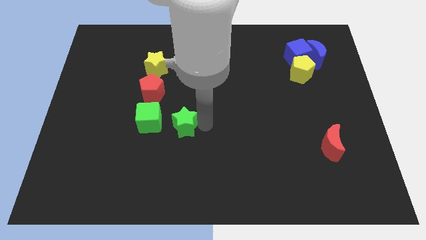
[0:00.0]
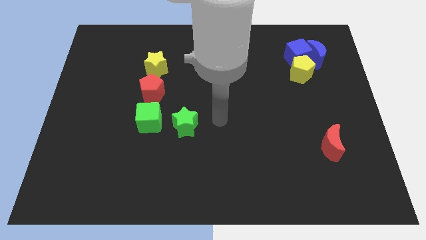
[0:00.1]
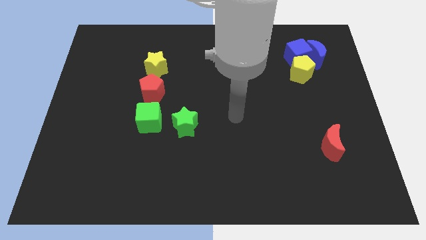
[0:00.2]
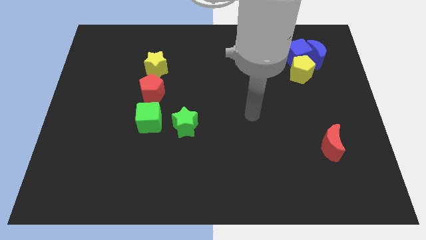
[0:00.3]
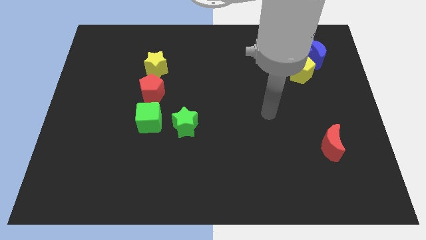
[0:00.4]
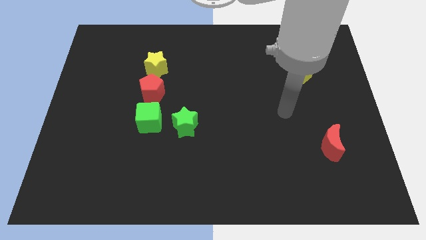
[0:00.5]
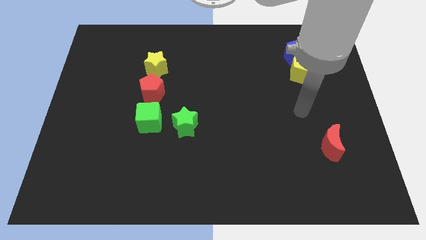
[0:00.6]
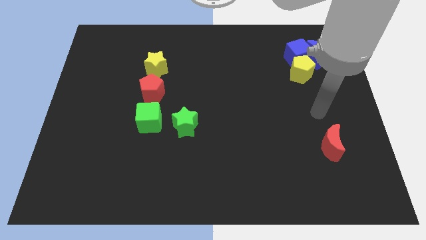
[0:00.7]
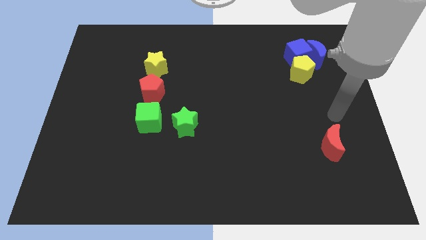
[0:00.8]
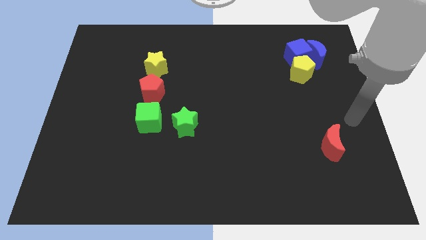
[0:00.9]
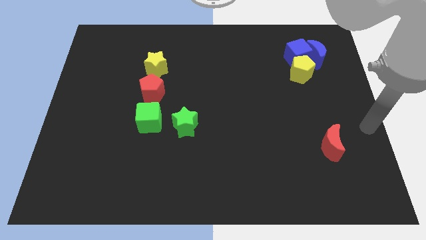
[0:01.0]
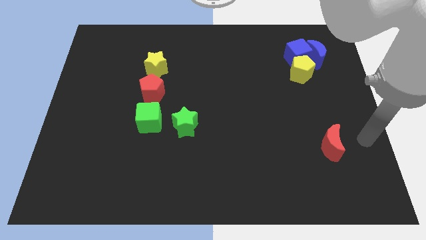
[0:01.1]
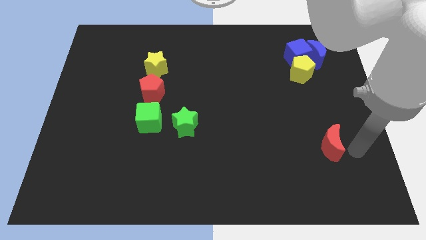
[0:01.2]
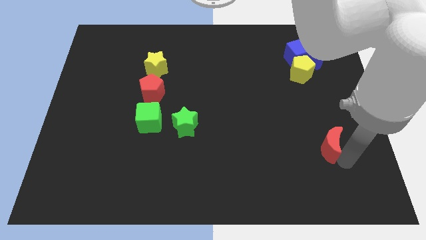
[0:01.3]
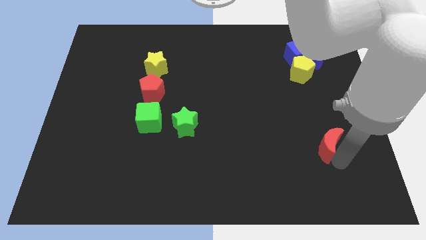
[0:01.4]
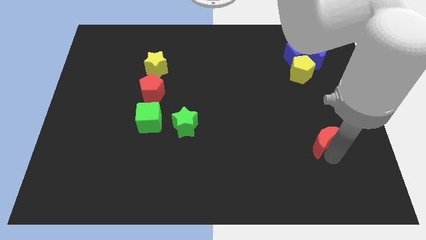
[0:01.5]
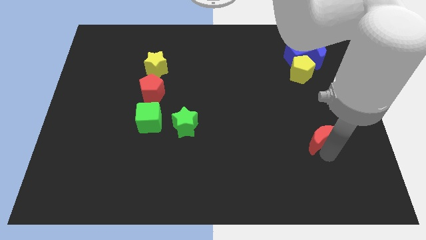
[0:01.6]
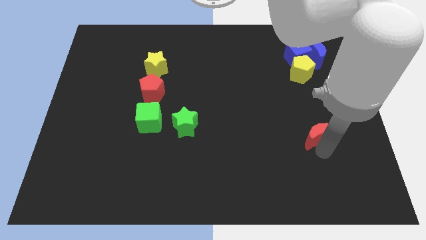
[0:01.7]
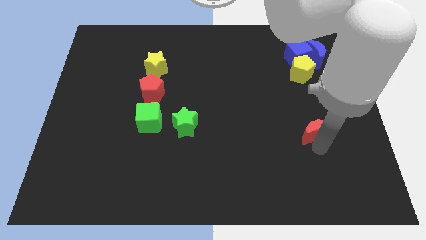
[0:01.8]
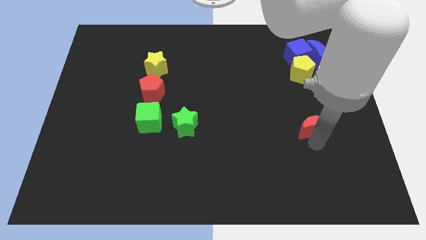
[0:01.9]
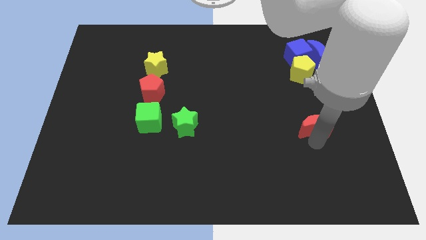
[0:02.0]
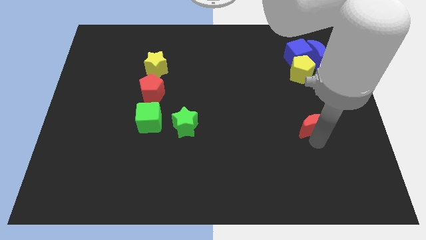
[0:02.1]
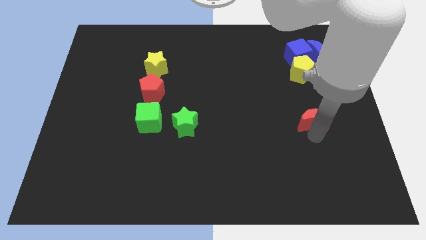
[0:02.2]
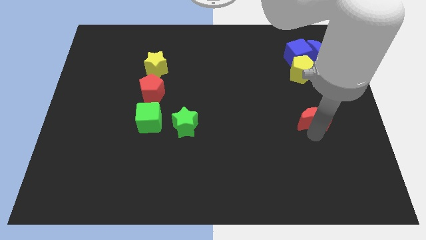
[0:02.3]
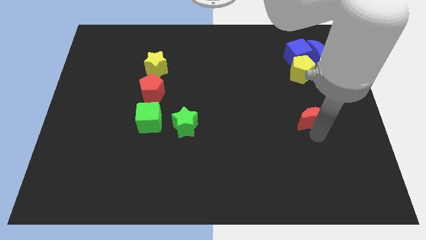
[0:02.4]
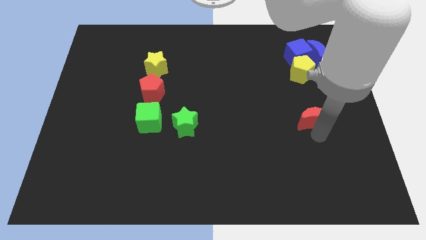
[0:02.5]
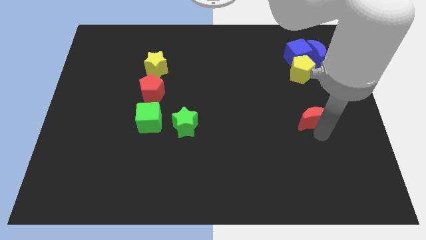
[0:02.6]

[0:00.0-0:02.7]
push the red crescent to the bottom of the yellow pentagon

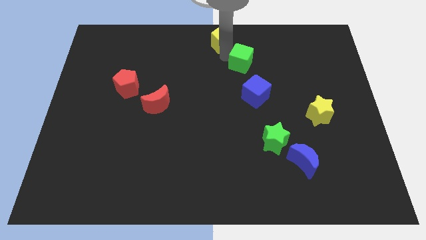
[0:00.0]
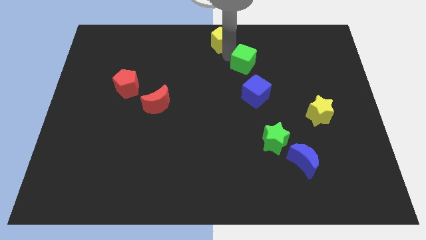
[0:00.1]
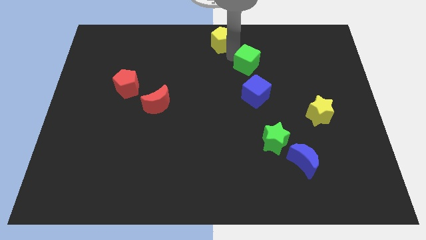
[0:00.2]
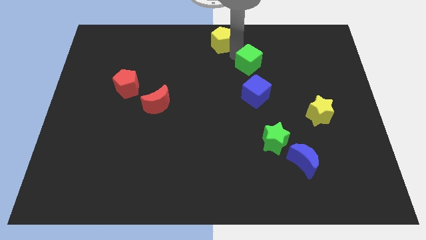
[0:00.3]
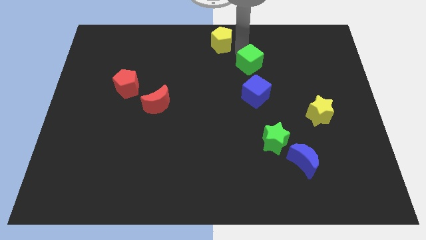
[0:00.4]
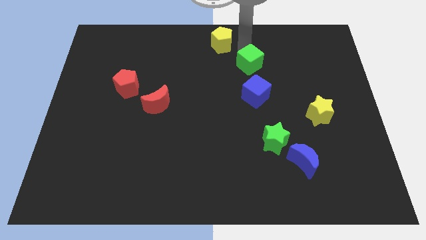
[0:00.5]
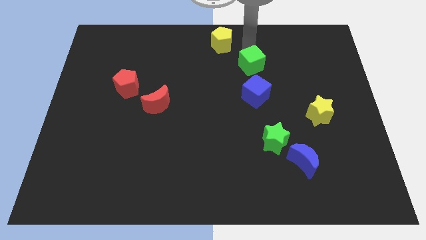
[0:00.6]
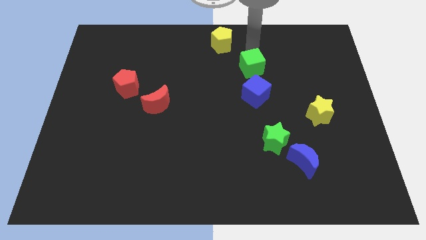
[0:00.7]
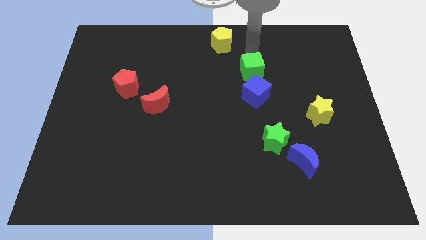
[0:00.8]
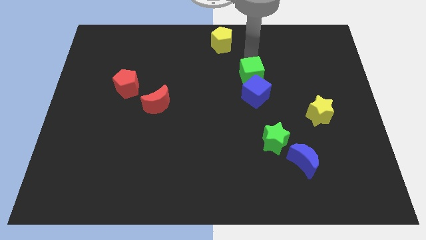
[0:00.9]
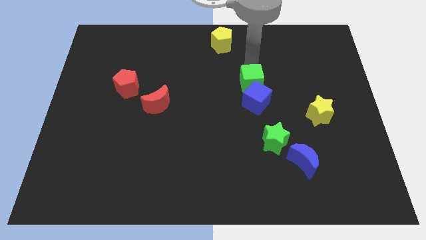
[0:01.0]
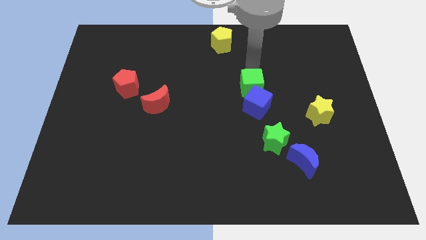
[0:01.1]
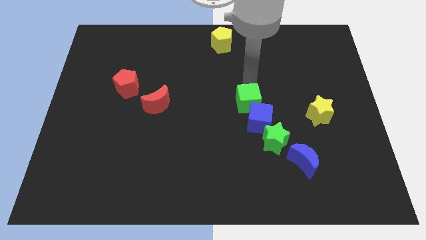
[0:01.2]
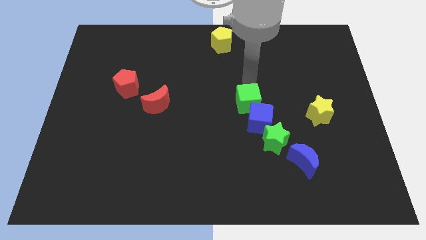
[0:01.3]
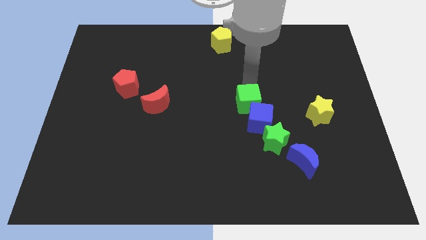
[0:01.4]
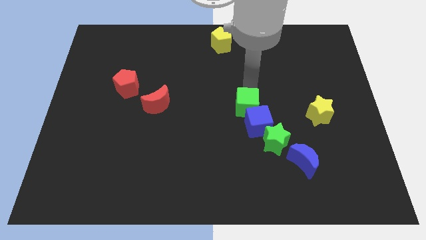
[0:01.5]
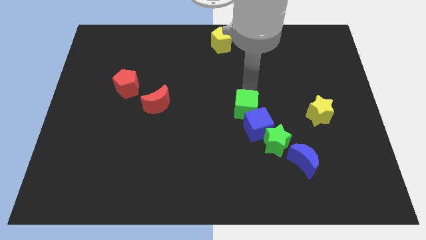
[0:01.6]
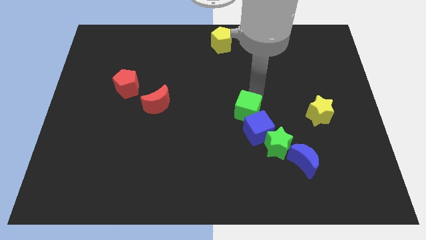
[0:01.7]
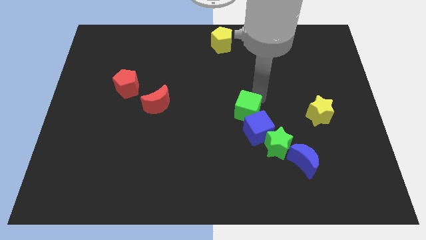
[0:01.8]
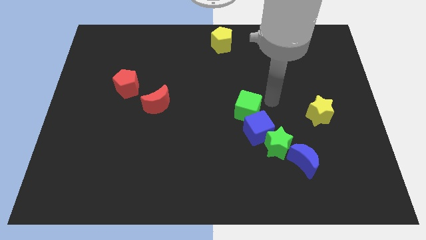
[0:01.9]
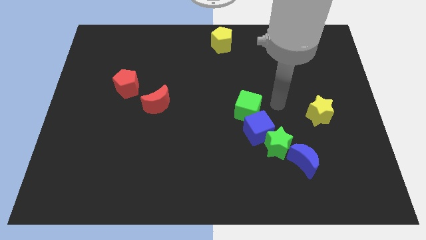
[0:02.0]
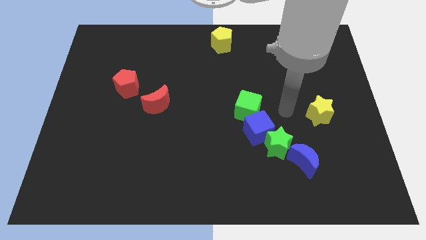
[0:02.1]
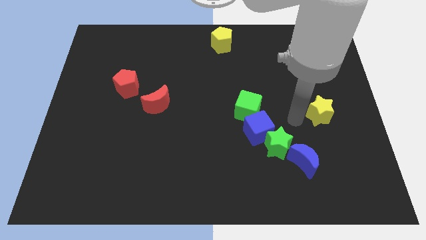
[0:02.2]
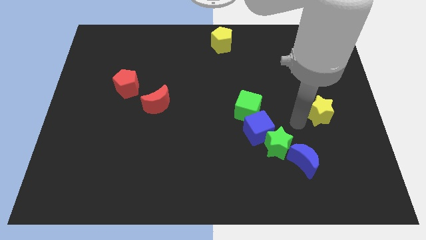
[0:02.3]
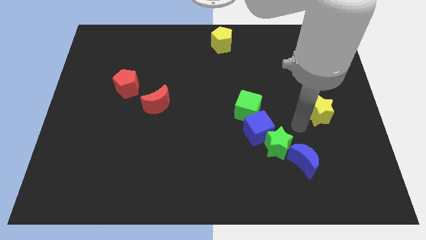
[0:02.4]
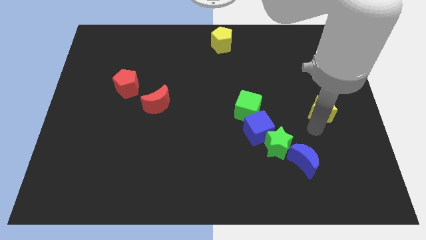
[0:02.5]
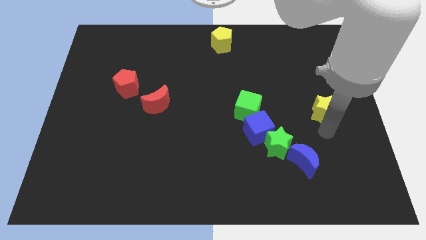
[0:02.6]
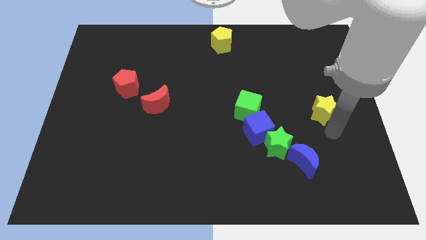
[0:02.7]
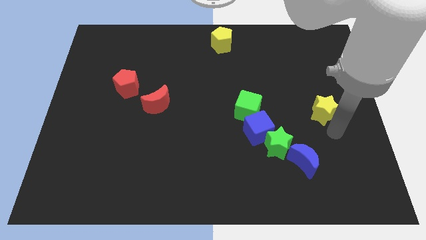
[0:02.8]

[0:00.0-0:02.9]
move the green cube above the blue cube

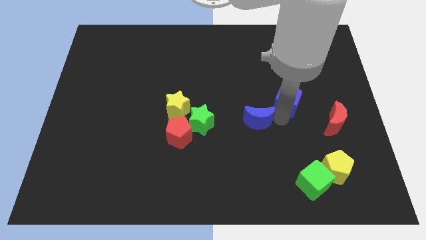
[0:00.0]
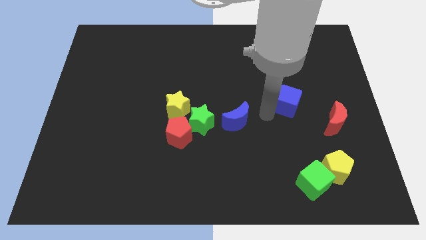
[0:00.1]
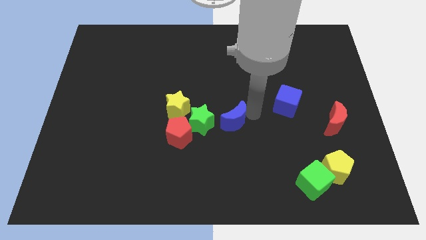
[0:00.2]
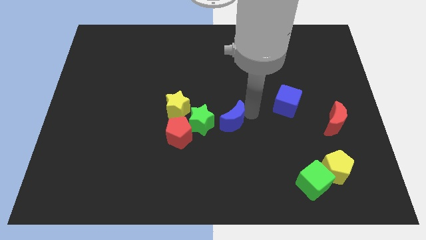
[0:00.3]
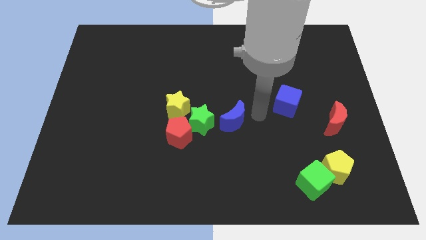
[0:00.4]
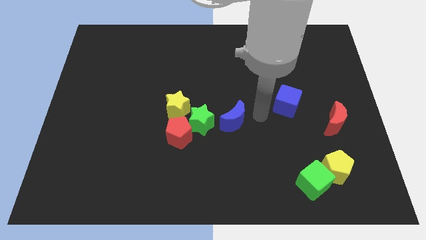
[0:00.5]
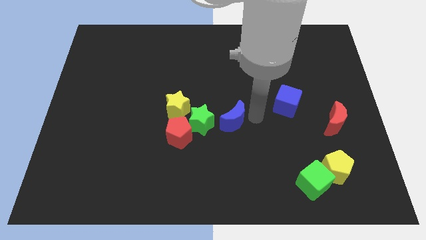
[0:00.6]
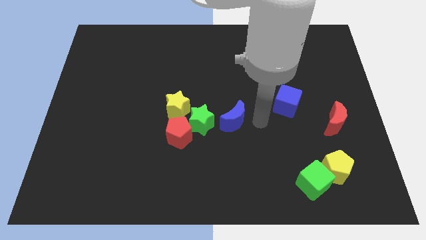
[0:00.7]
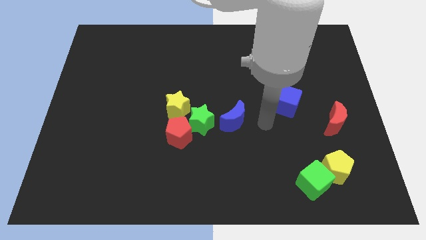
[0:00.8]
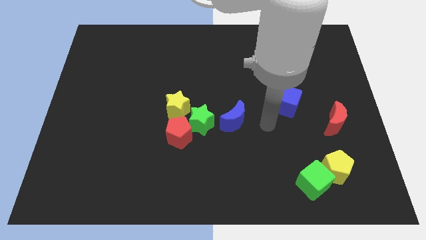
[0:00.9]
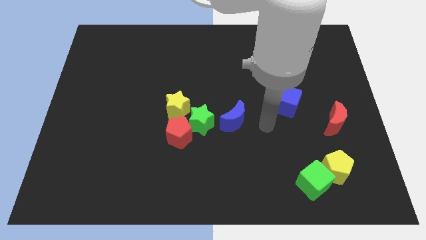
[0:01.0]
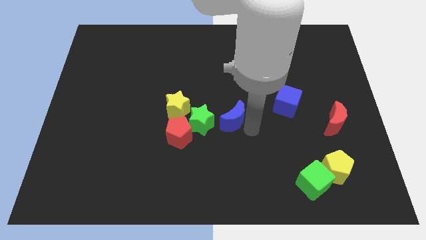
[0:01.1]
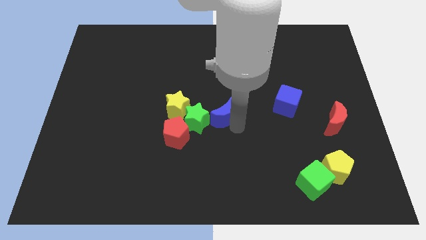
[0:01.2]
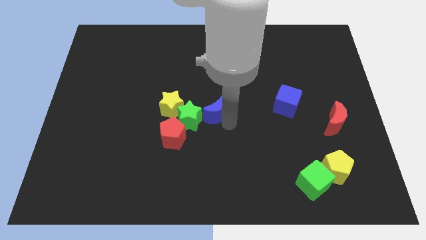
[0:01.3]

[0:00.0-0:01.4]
place blue crescent near green star

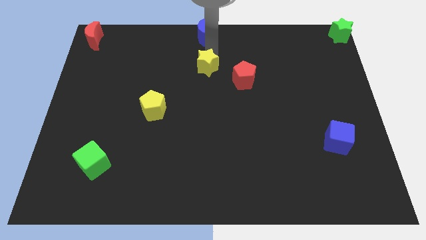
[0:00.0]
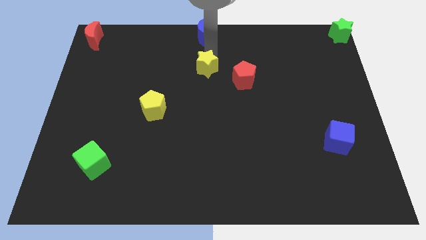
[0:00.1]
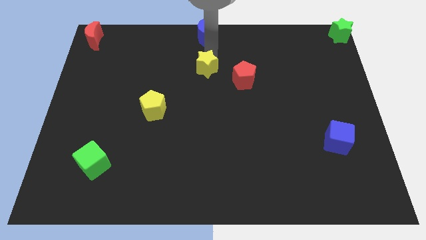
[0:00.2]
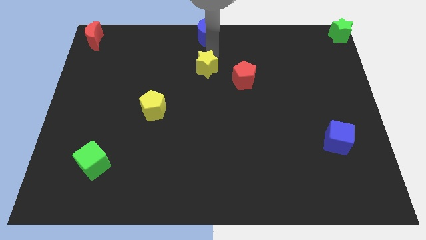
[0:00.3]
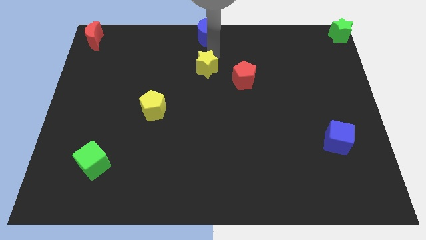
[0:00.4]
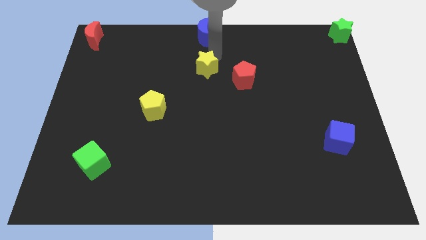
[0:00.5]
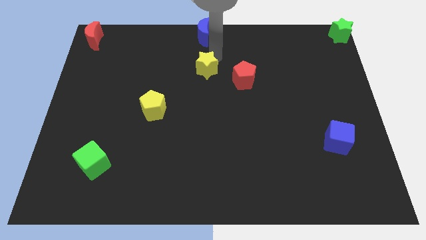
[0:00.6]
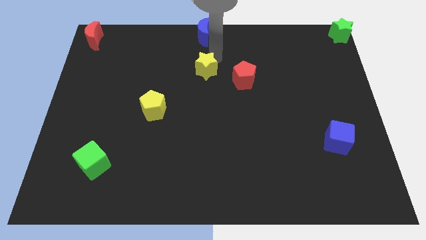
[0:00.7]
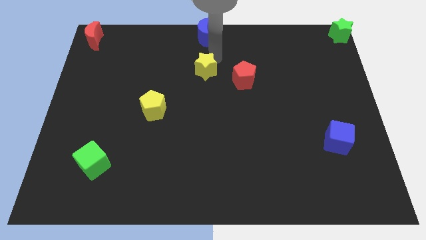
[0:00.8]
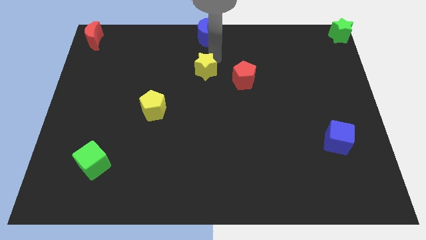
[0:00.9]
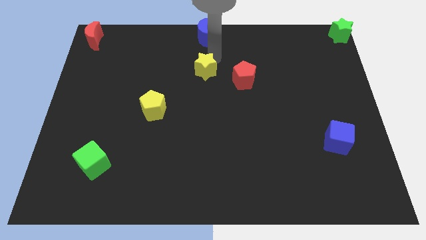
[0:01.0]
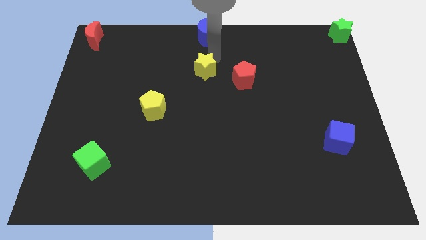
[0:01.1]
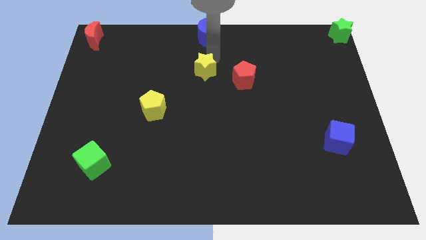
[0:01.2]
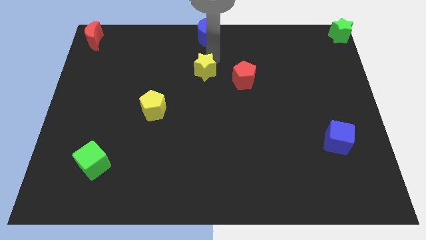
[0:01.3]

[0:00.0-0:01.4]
adjust the yellow star

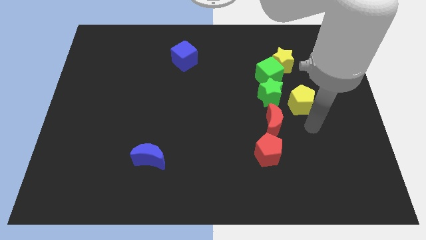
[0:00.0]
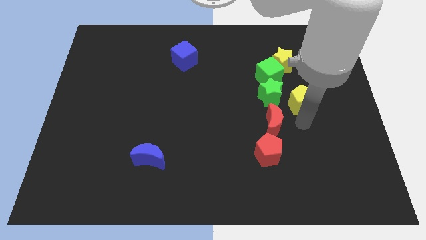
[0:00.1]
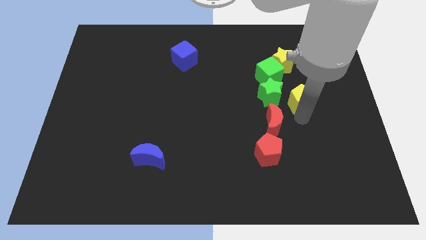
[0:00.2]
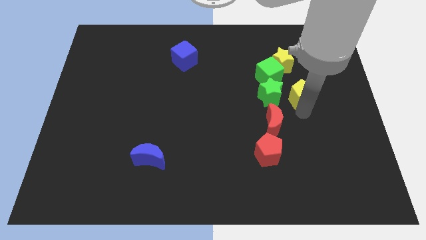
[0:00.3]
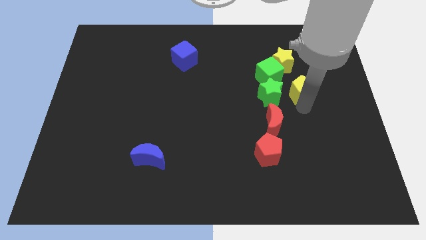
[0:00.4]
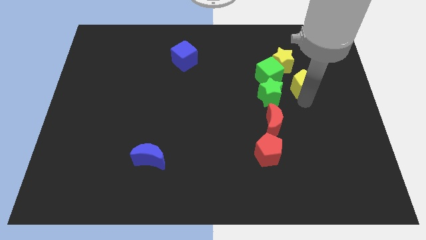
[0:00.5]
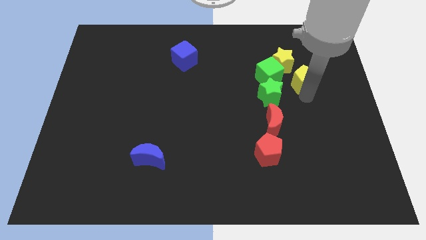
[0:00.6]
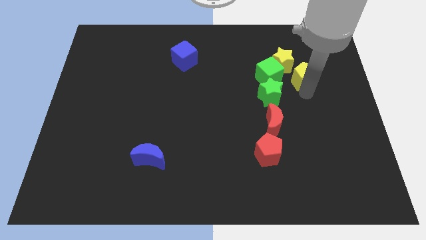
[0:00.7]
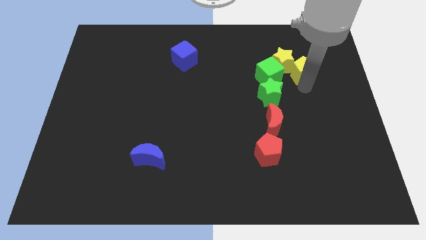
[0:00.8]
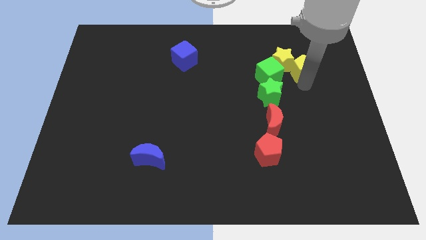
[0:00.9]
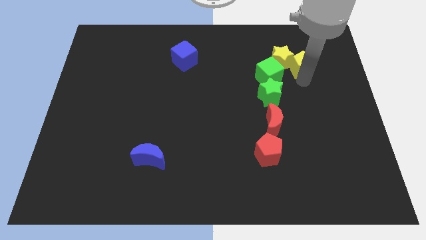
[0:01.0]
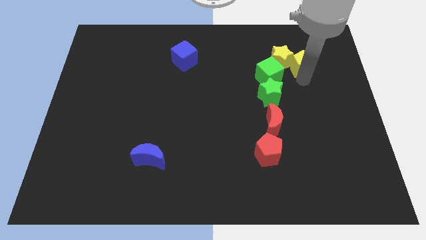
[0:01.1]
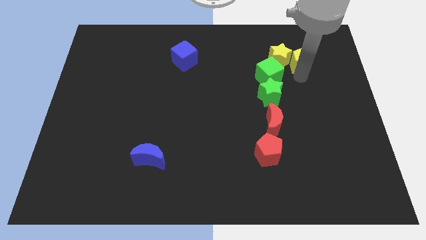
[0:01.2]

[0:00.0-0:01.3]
push the yellow pentagon into the yellow star
